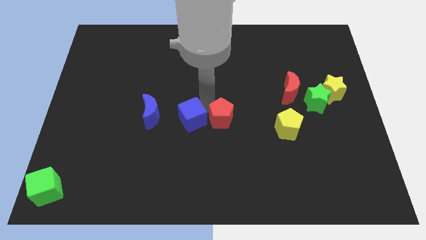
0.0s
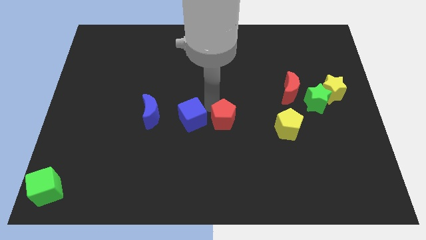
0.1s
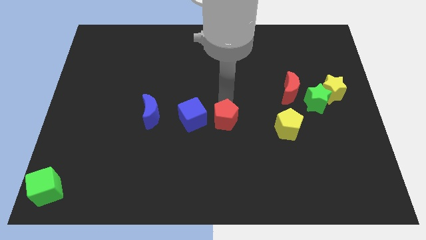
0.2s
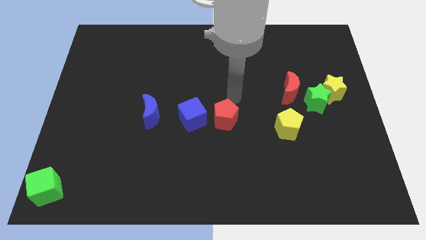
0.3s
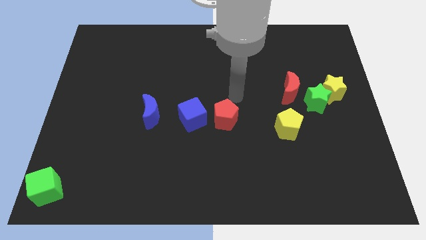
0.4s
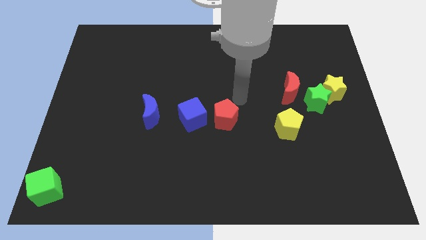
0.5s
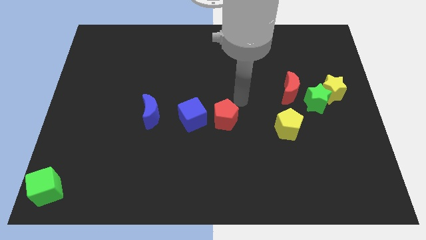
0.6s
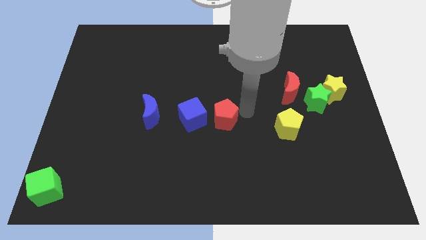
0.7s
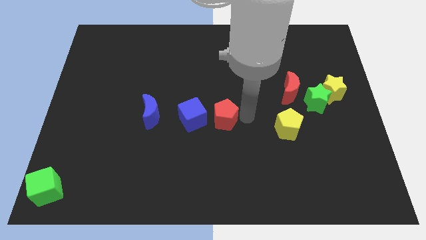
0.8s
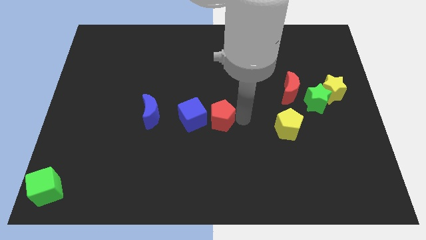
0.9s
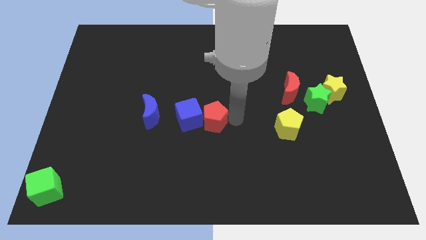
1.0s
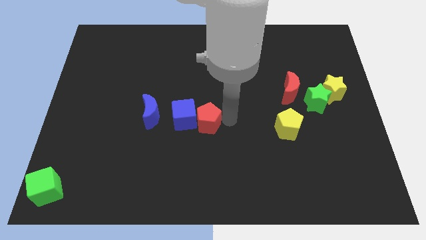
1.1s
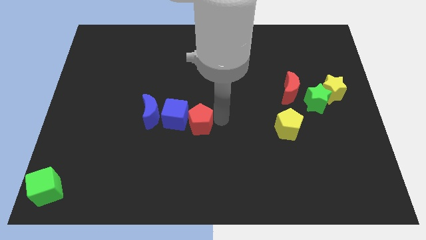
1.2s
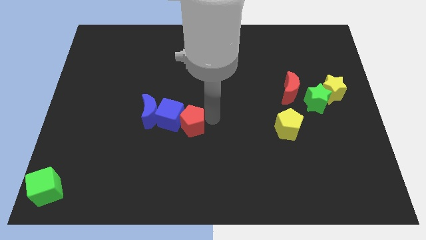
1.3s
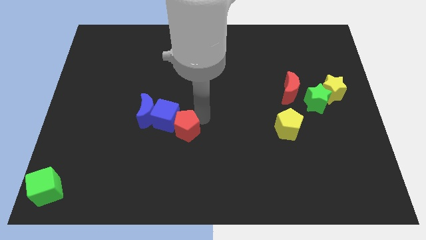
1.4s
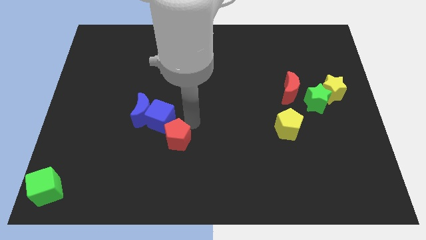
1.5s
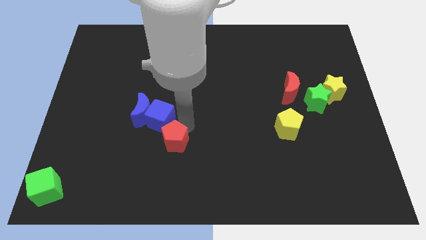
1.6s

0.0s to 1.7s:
push the blue cube and red pentagon into the blue moon

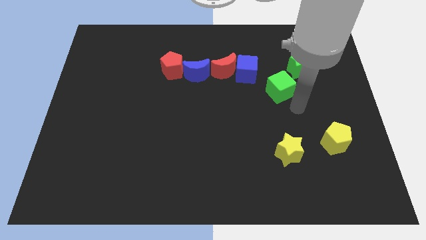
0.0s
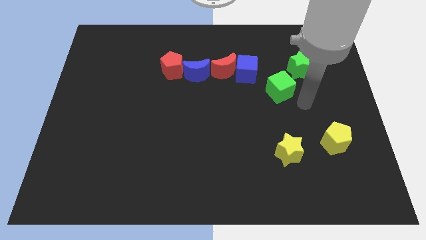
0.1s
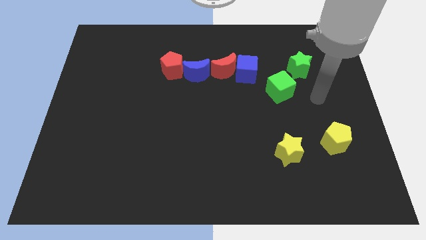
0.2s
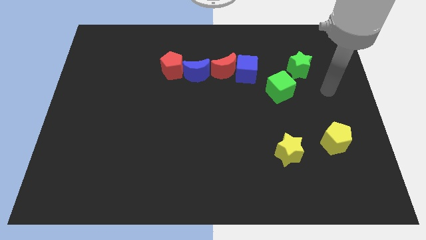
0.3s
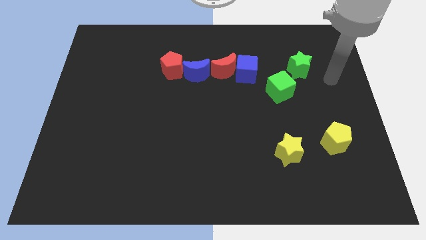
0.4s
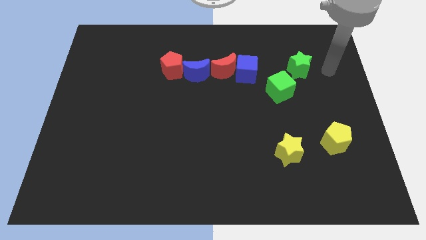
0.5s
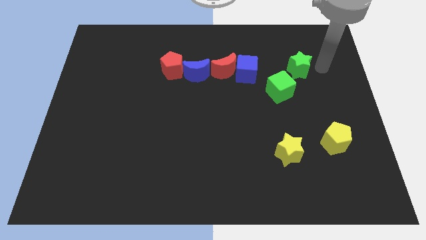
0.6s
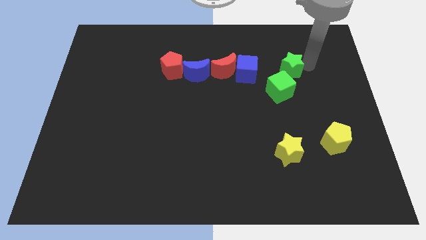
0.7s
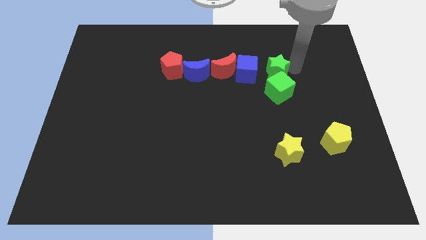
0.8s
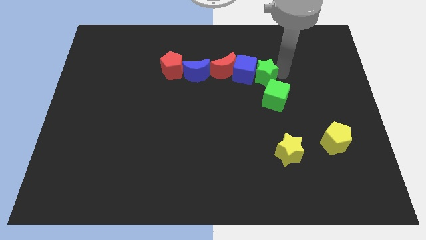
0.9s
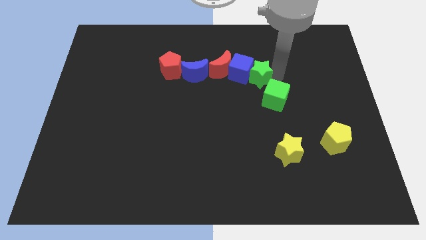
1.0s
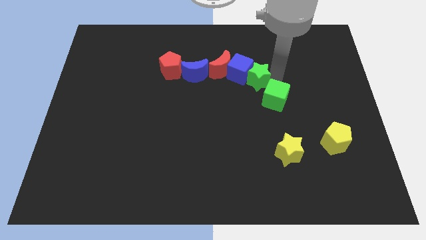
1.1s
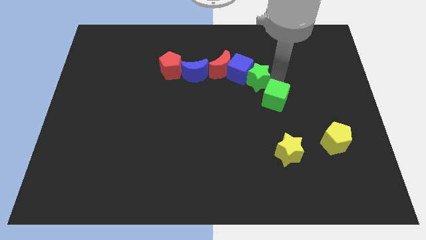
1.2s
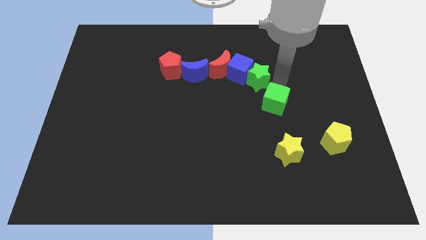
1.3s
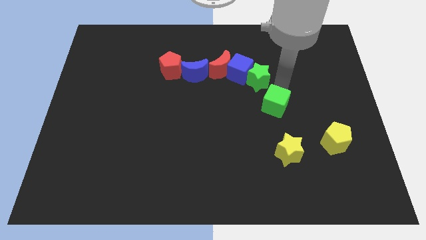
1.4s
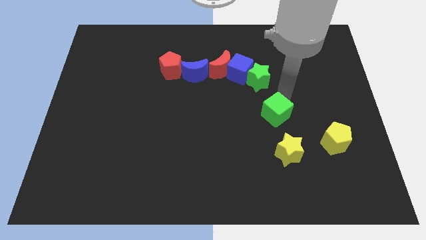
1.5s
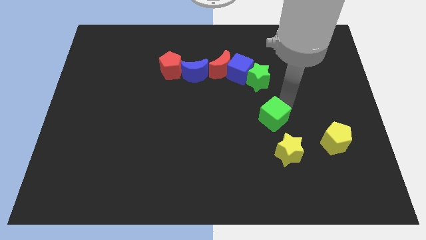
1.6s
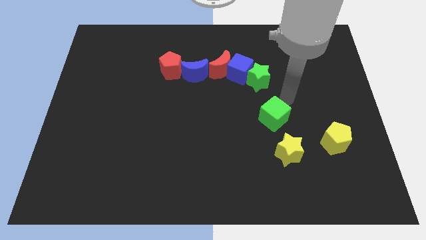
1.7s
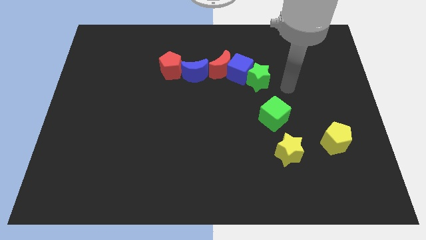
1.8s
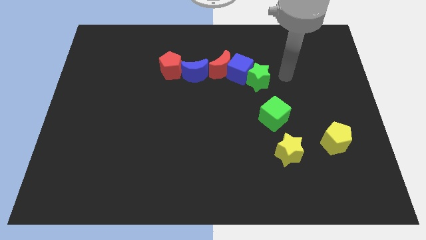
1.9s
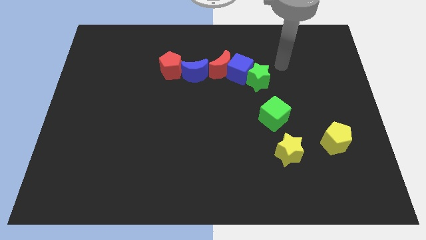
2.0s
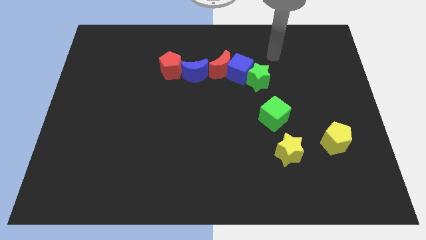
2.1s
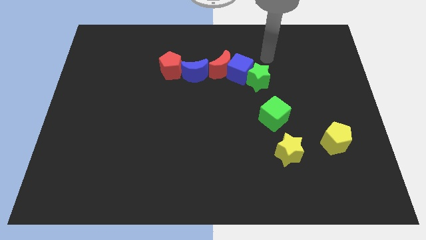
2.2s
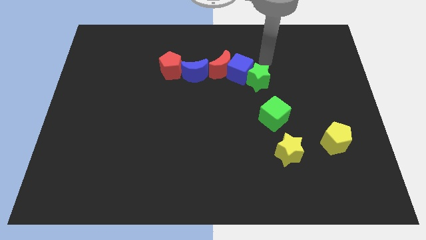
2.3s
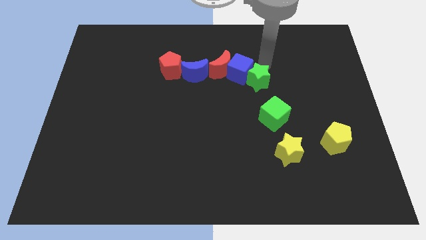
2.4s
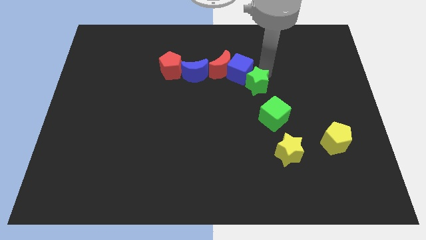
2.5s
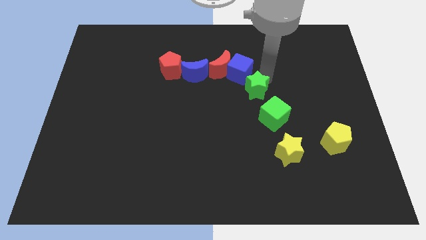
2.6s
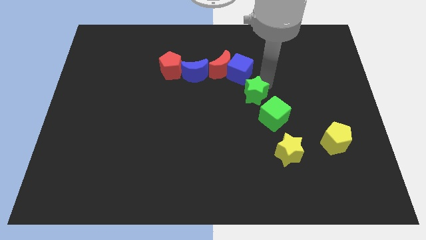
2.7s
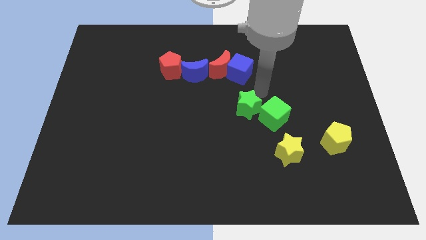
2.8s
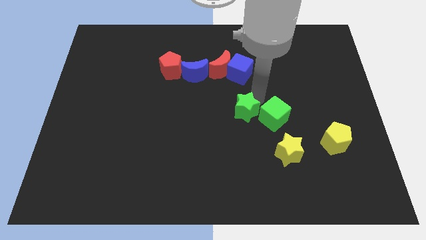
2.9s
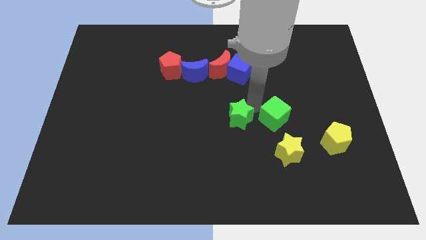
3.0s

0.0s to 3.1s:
move the green star parallel to the bottom of the blue cube

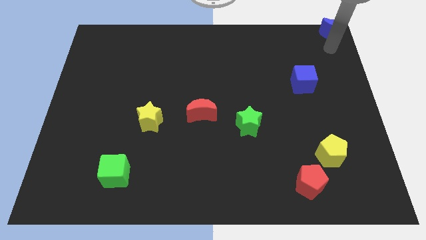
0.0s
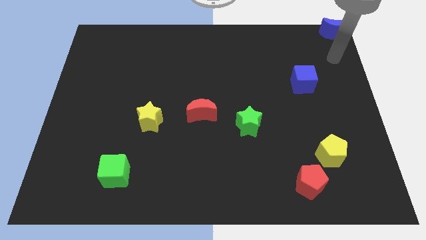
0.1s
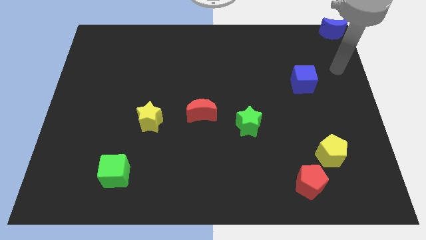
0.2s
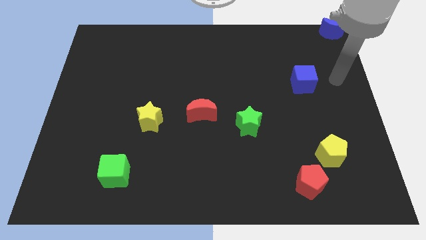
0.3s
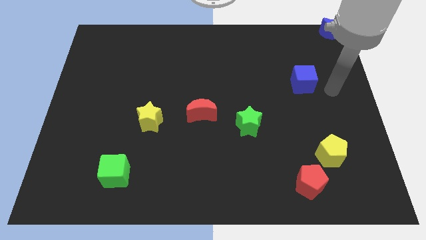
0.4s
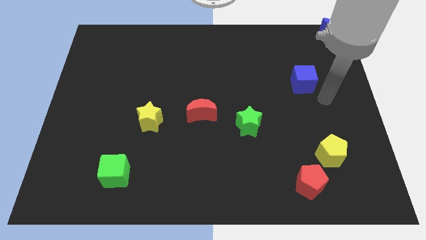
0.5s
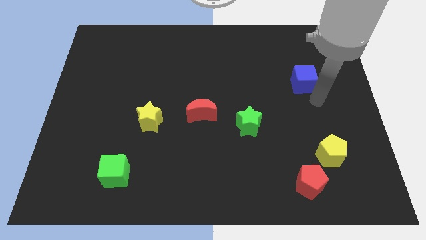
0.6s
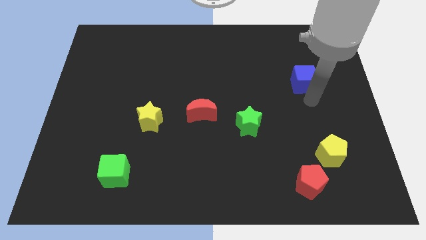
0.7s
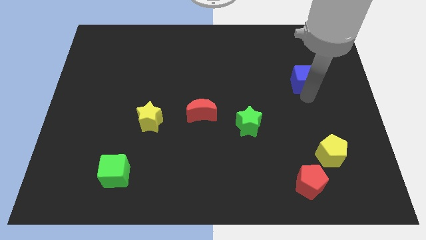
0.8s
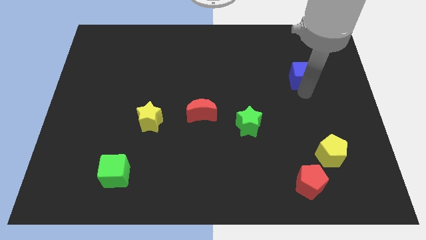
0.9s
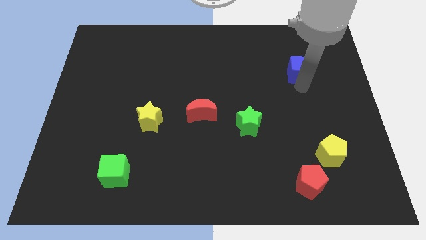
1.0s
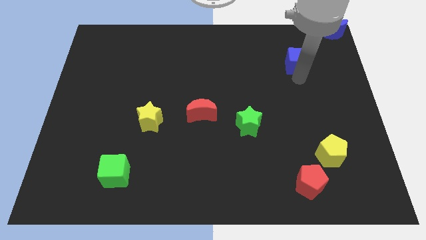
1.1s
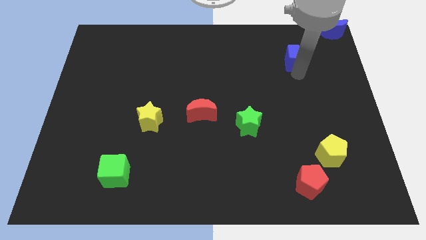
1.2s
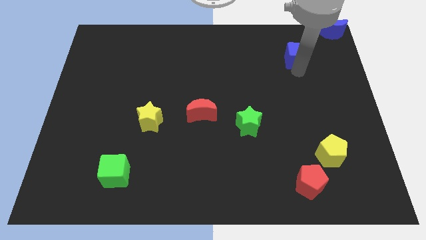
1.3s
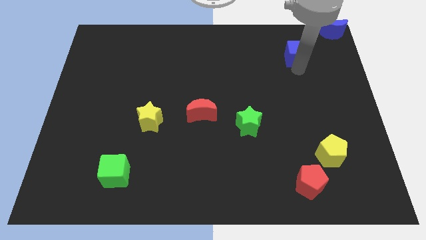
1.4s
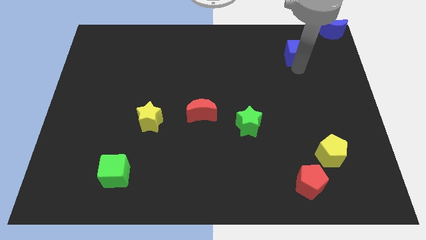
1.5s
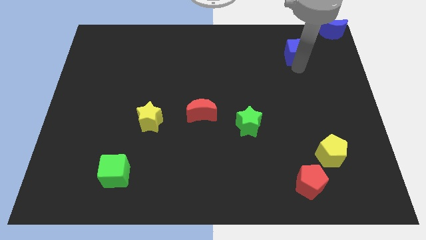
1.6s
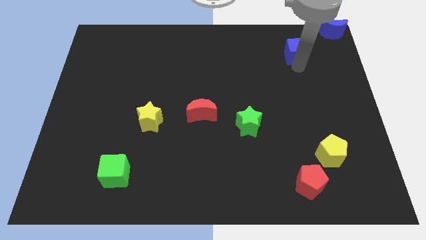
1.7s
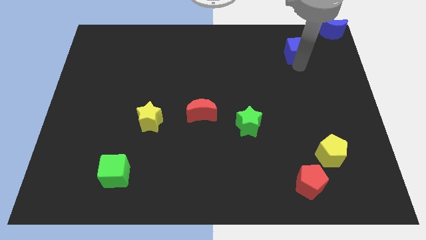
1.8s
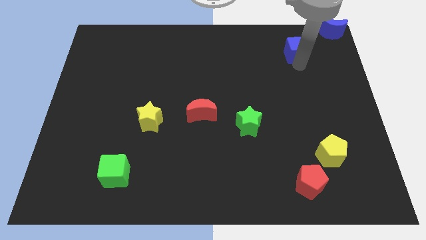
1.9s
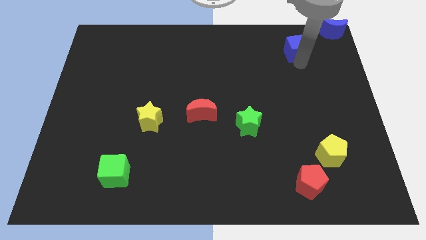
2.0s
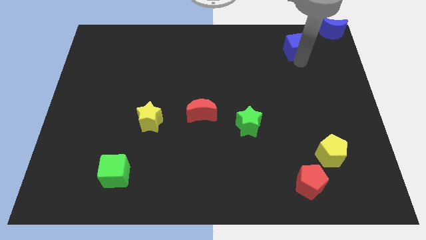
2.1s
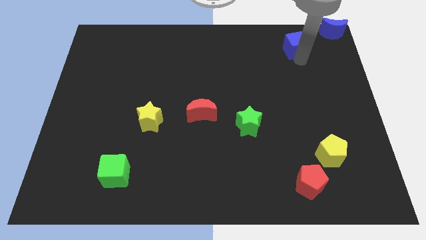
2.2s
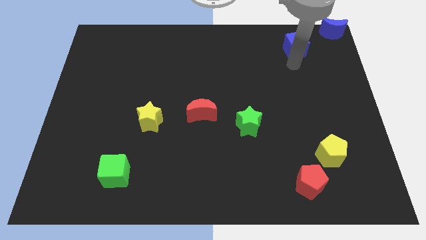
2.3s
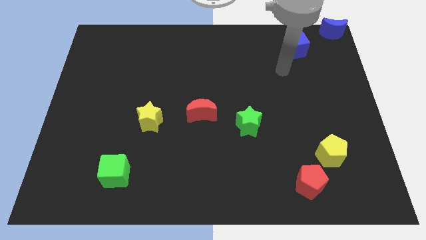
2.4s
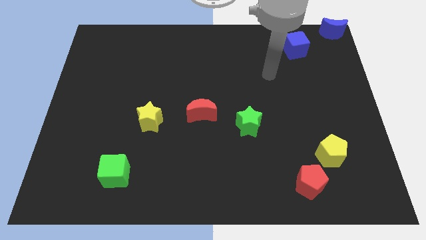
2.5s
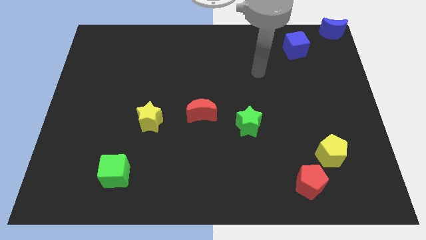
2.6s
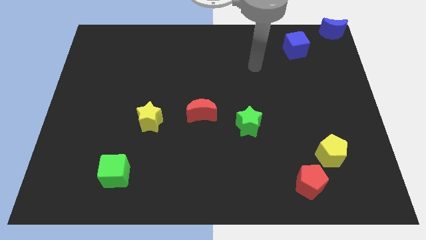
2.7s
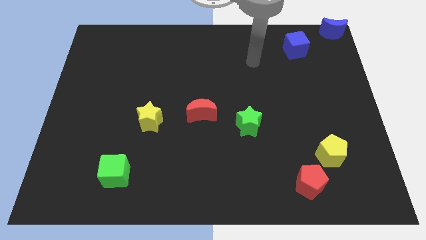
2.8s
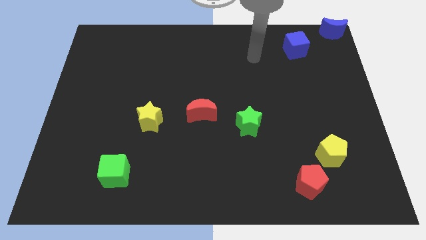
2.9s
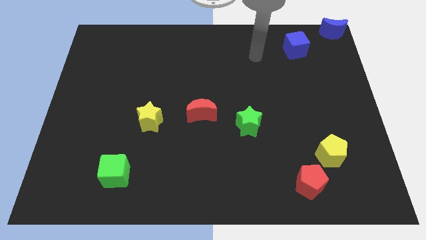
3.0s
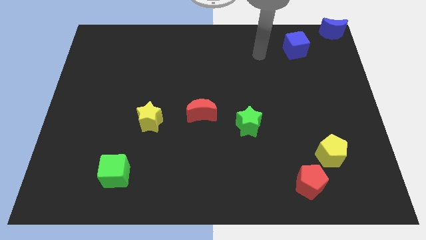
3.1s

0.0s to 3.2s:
push the blue cube slightly towards up

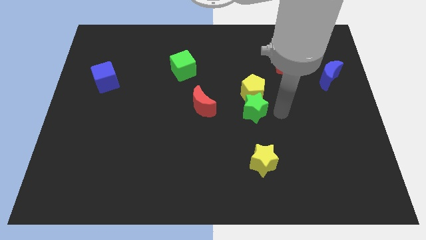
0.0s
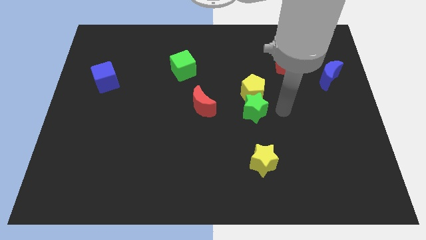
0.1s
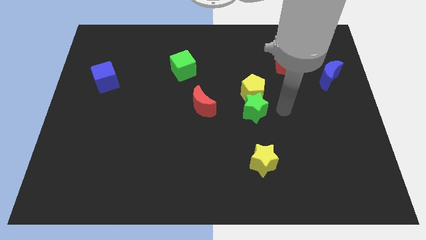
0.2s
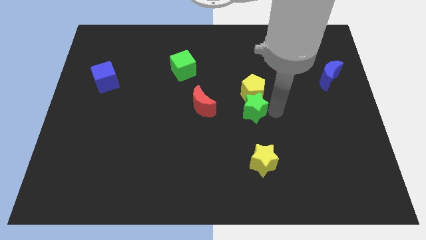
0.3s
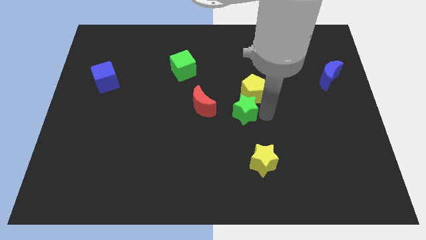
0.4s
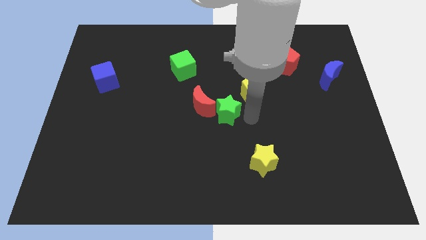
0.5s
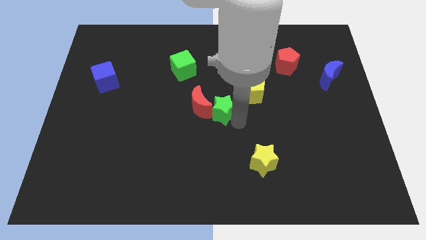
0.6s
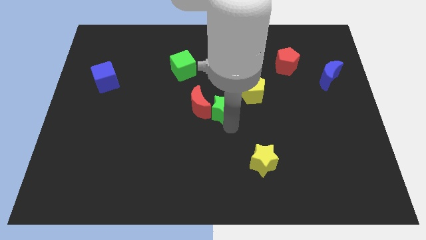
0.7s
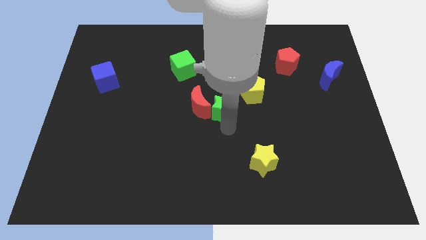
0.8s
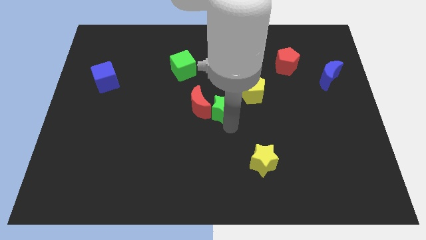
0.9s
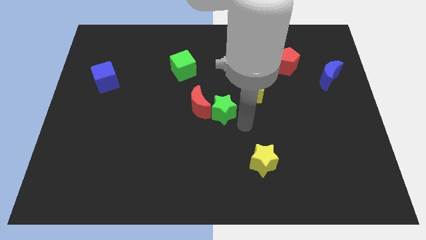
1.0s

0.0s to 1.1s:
move the green star into the right side of the red moon
